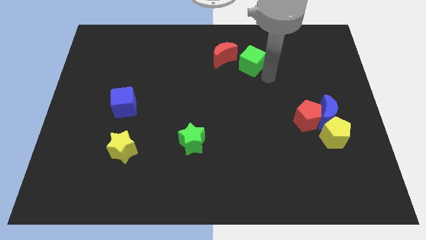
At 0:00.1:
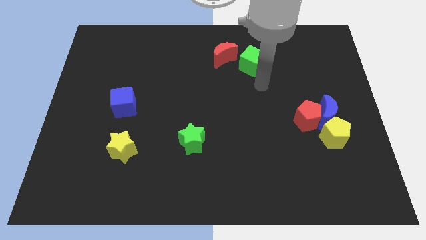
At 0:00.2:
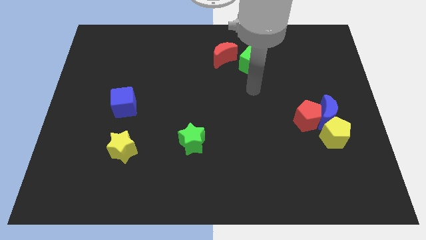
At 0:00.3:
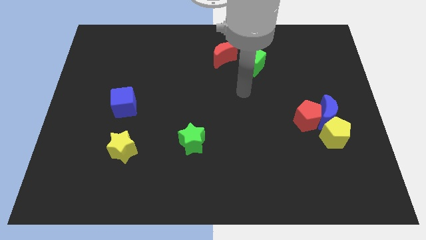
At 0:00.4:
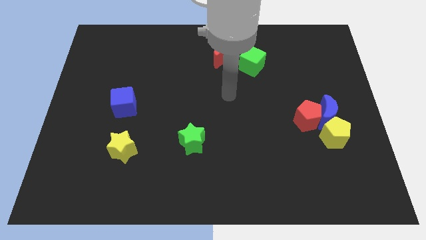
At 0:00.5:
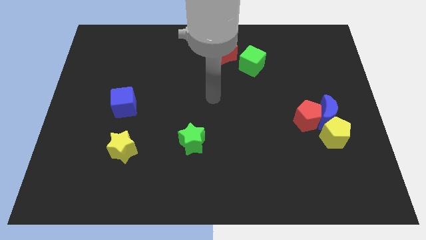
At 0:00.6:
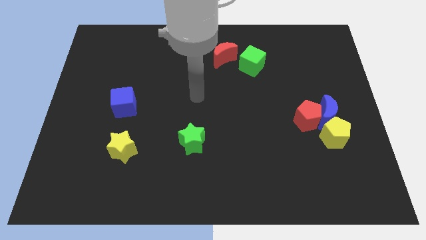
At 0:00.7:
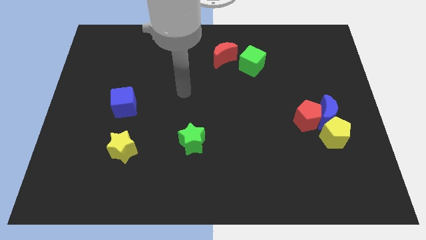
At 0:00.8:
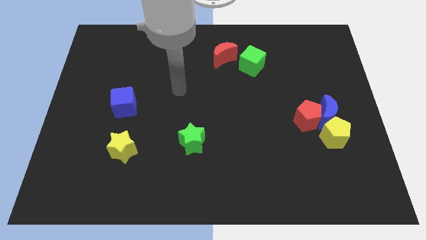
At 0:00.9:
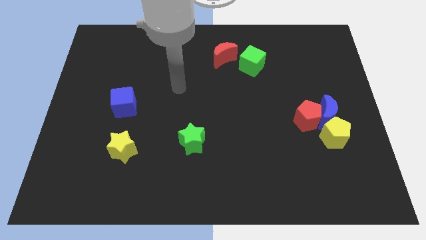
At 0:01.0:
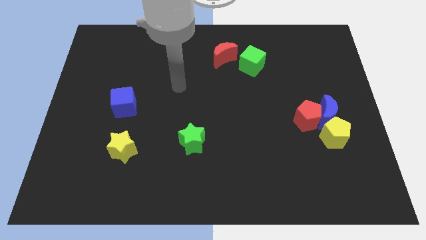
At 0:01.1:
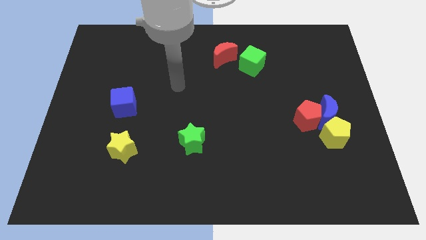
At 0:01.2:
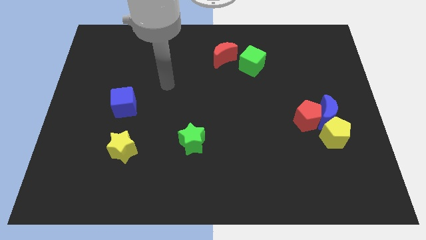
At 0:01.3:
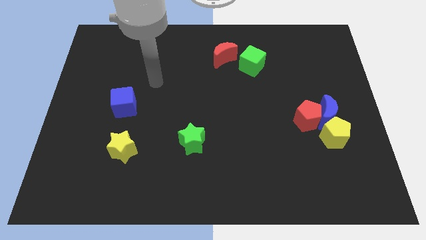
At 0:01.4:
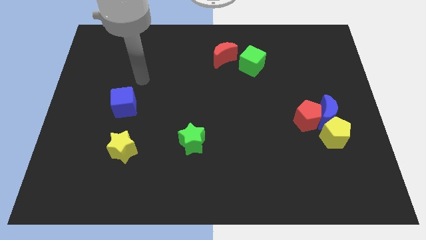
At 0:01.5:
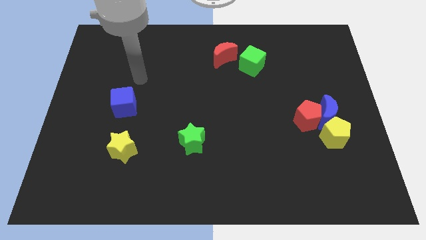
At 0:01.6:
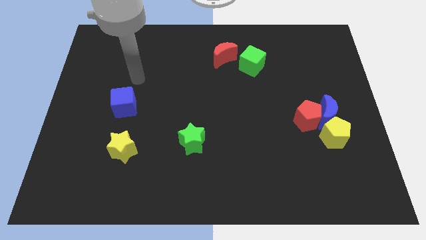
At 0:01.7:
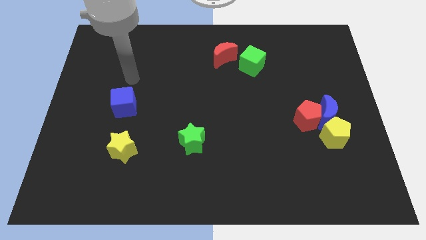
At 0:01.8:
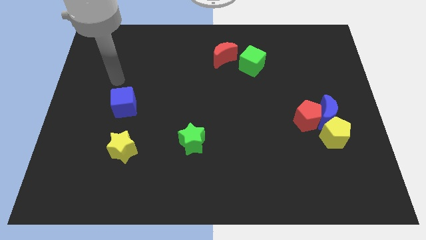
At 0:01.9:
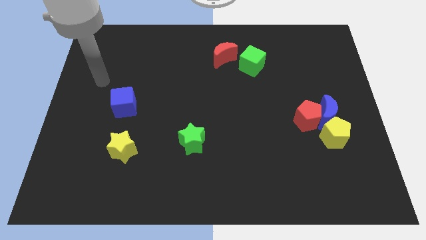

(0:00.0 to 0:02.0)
move the arm away from the green cube

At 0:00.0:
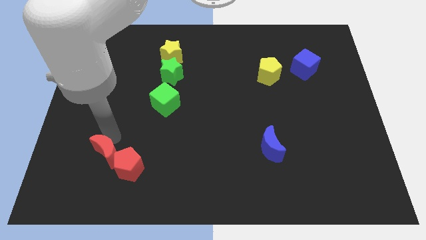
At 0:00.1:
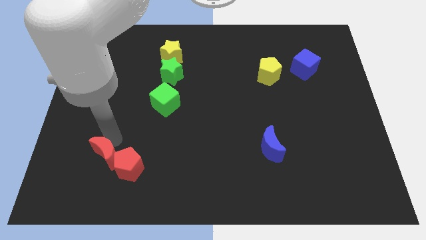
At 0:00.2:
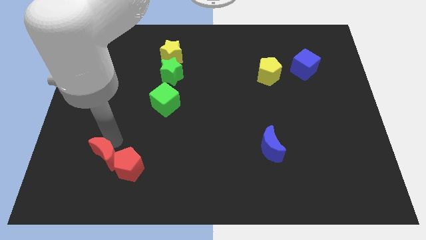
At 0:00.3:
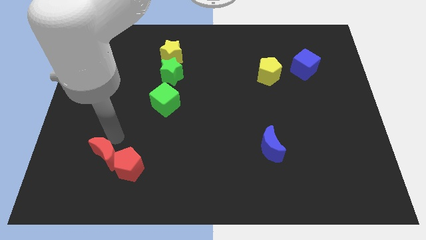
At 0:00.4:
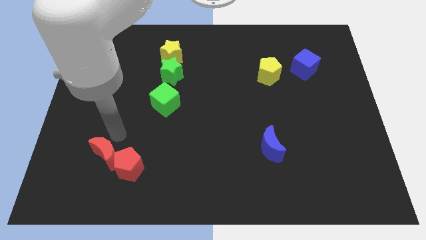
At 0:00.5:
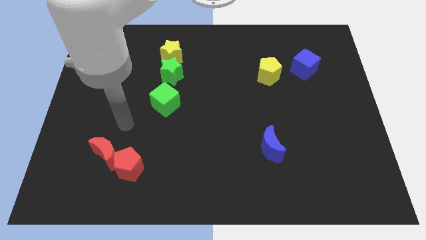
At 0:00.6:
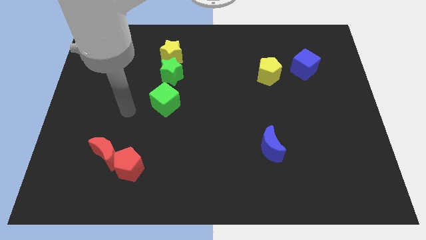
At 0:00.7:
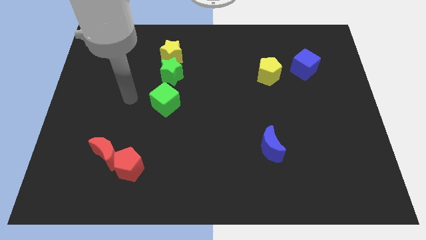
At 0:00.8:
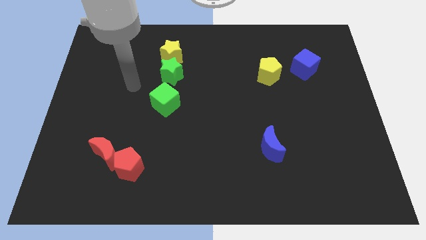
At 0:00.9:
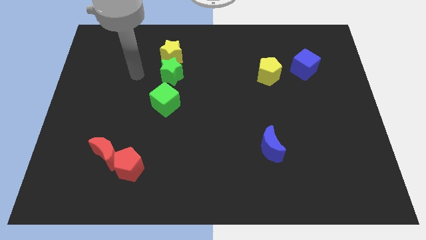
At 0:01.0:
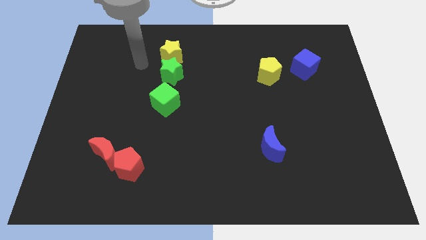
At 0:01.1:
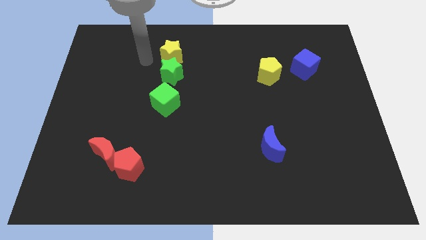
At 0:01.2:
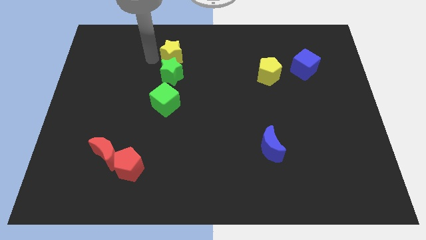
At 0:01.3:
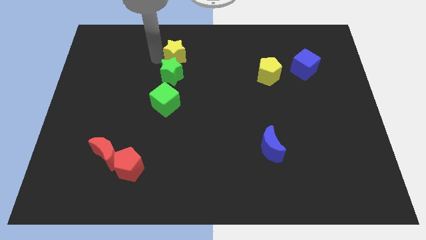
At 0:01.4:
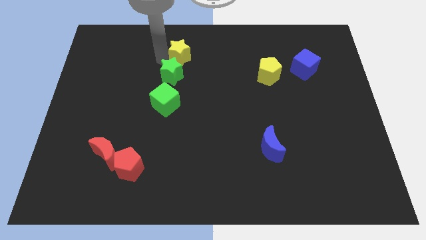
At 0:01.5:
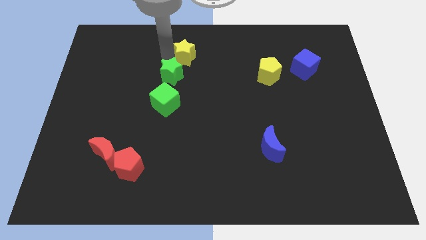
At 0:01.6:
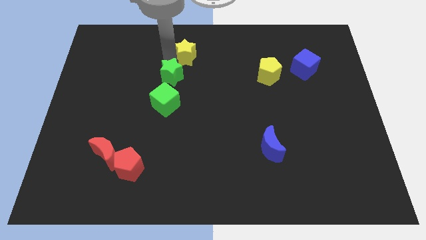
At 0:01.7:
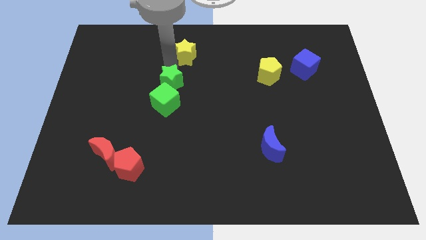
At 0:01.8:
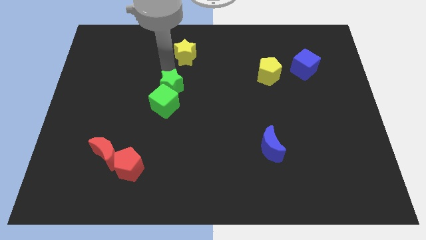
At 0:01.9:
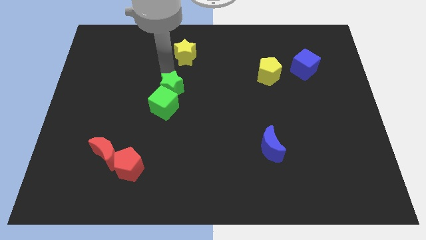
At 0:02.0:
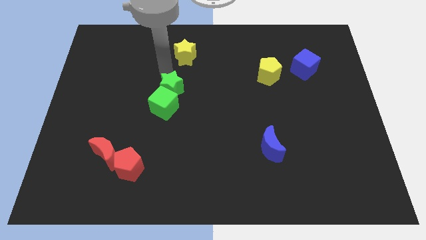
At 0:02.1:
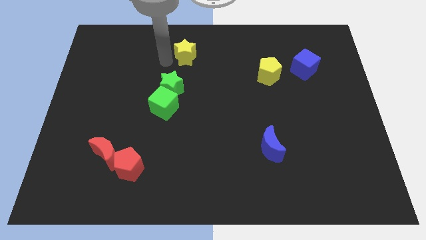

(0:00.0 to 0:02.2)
push the green star into the green cube

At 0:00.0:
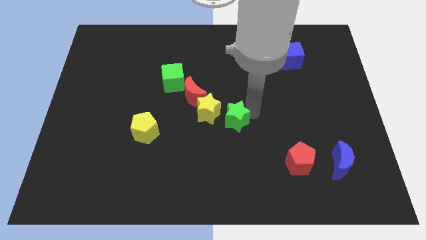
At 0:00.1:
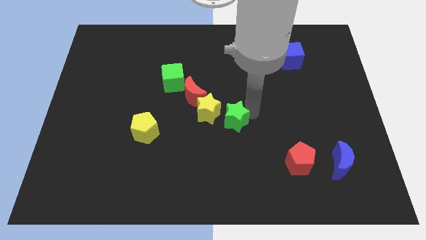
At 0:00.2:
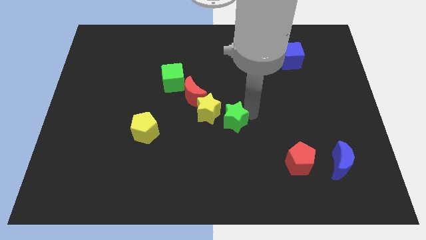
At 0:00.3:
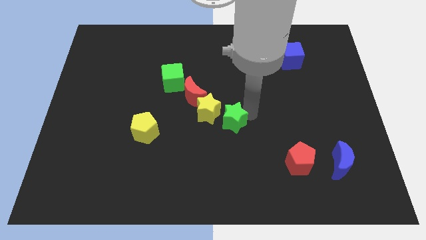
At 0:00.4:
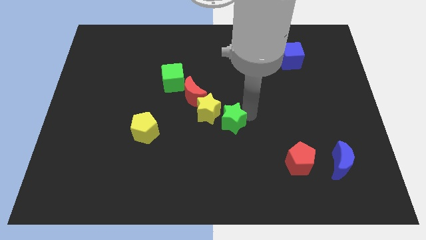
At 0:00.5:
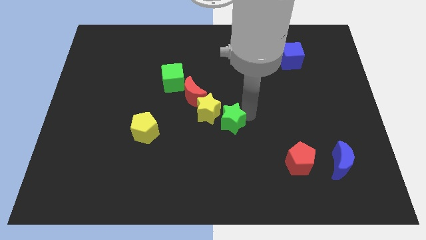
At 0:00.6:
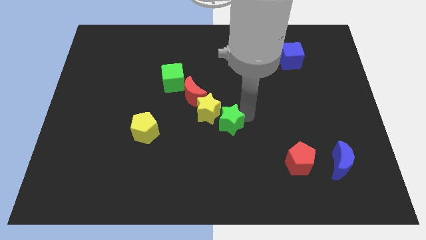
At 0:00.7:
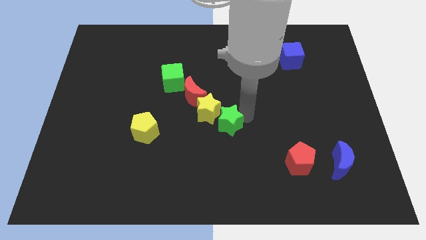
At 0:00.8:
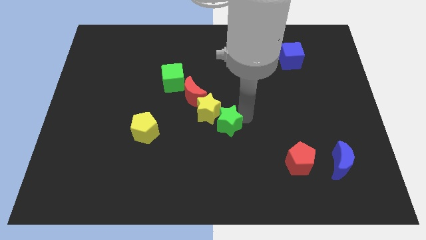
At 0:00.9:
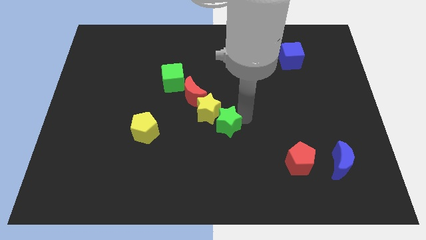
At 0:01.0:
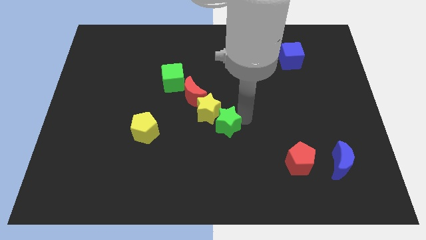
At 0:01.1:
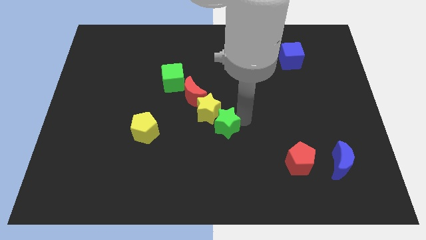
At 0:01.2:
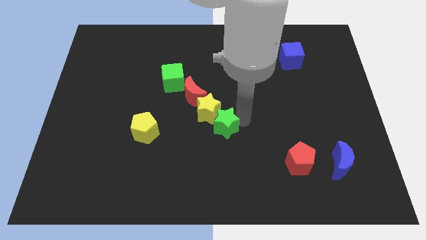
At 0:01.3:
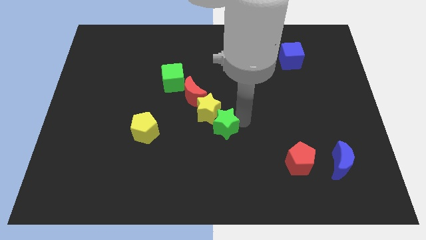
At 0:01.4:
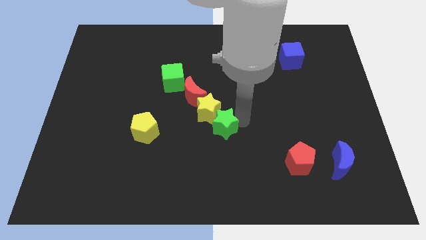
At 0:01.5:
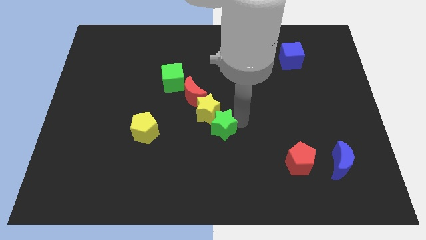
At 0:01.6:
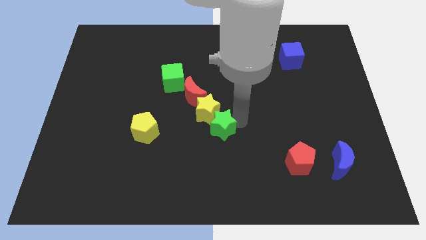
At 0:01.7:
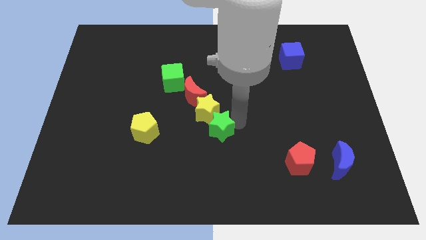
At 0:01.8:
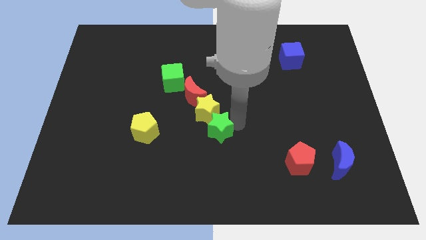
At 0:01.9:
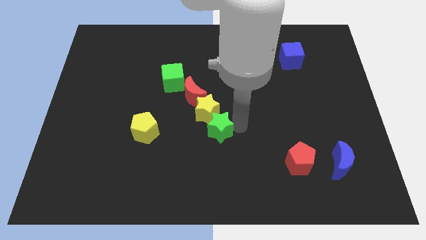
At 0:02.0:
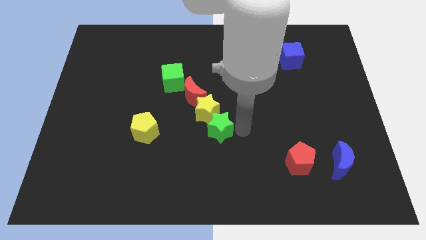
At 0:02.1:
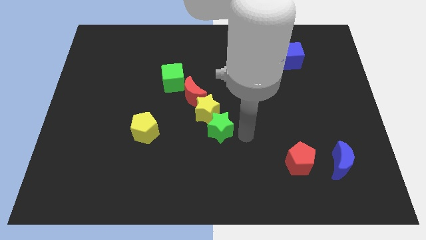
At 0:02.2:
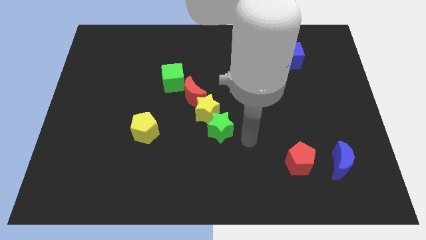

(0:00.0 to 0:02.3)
move the green star to the bottom of the yellow star

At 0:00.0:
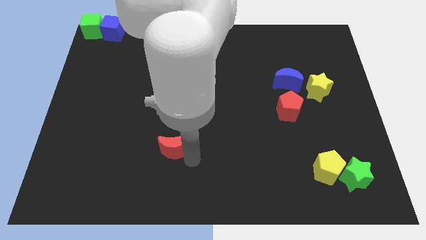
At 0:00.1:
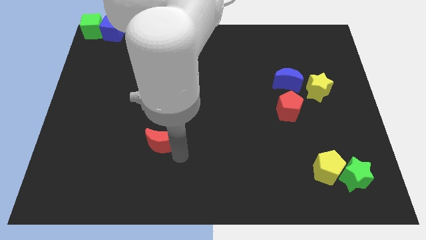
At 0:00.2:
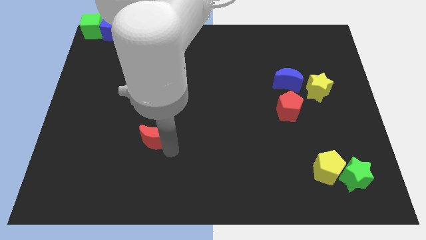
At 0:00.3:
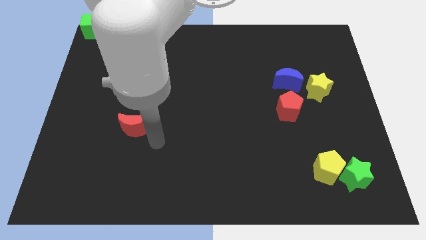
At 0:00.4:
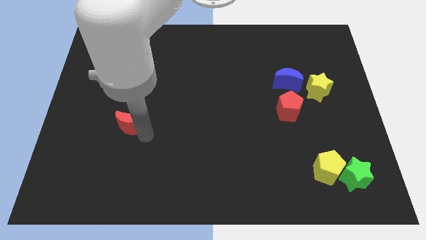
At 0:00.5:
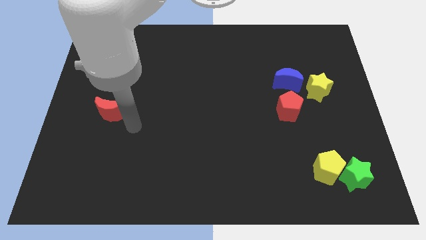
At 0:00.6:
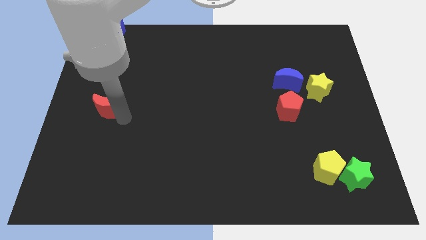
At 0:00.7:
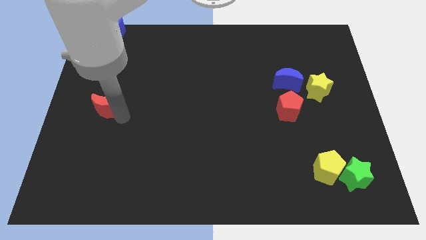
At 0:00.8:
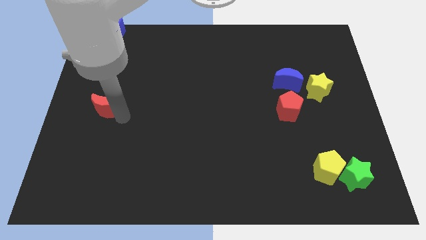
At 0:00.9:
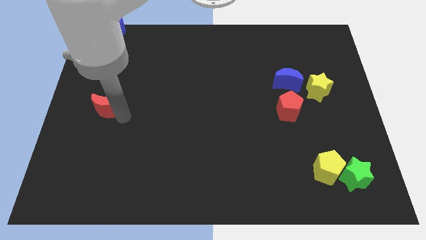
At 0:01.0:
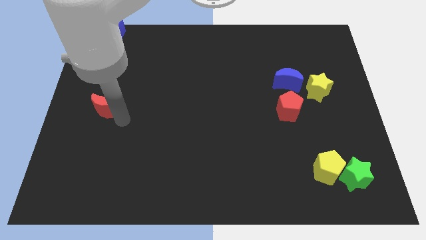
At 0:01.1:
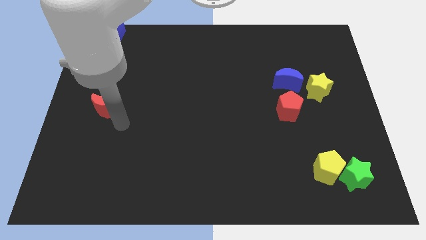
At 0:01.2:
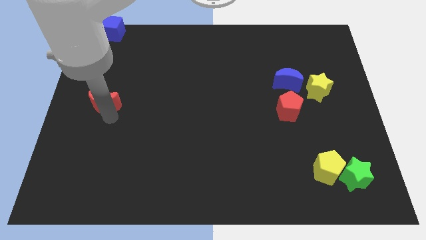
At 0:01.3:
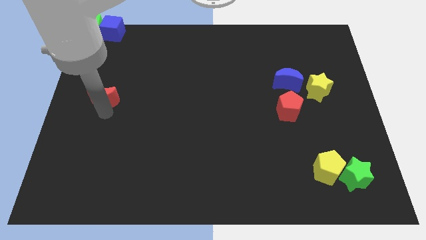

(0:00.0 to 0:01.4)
drag the red moon slightly upwards

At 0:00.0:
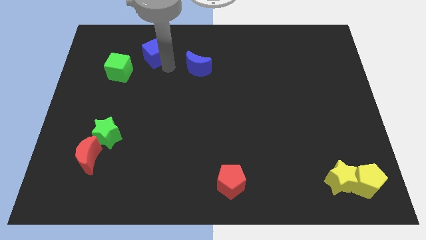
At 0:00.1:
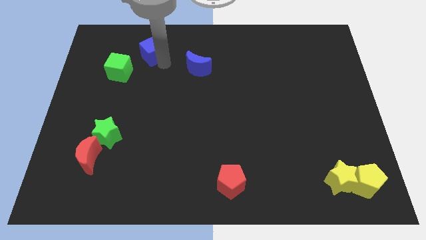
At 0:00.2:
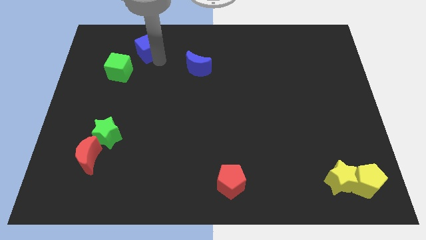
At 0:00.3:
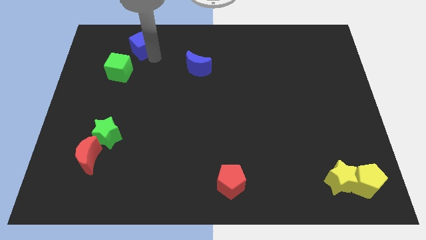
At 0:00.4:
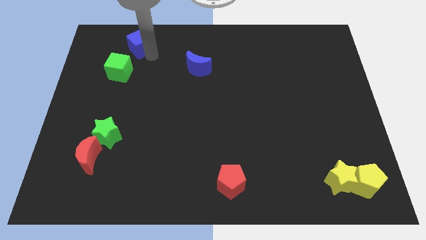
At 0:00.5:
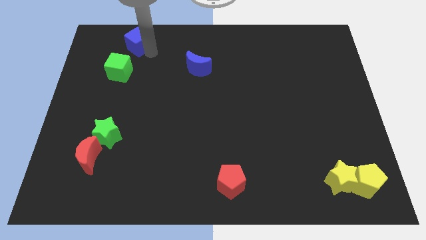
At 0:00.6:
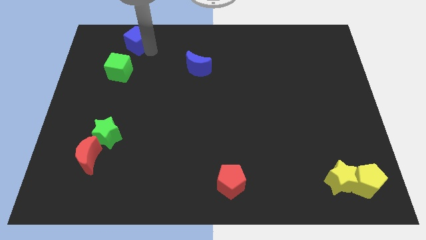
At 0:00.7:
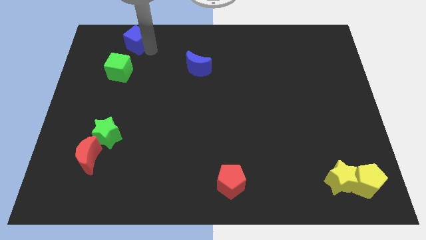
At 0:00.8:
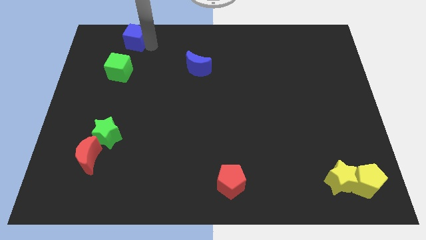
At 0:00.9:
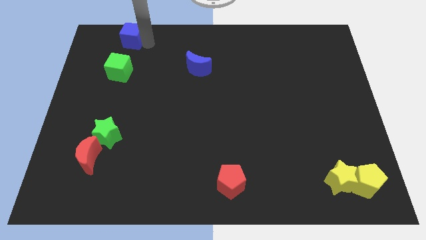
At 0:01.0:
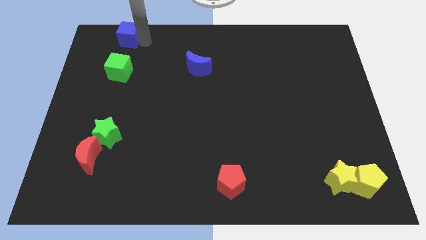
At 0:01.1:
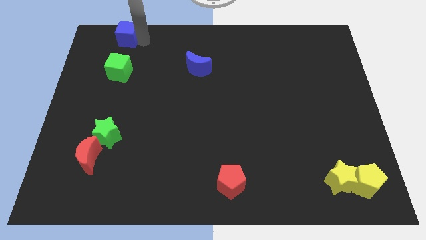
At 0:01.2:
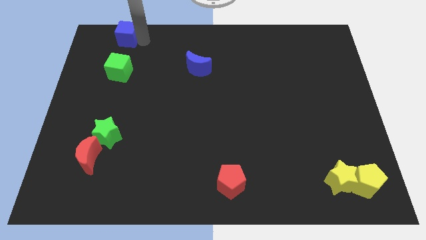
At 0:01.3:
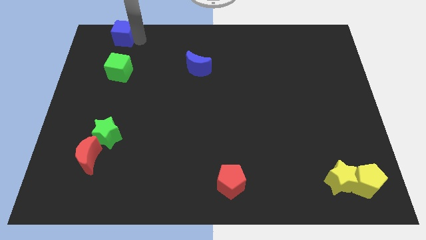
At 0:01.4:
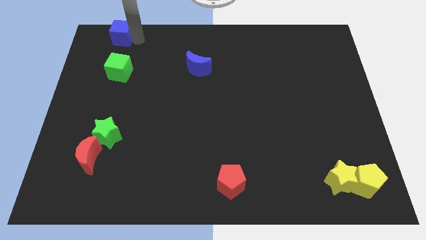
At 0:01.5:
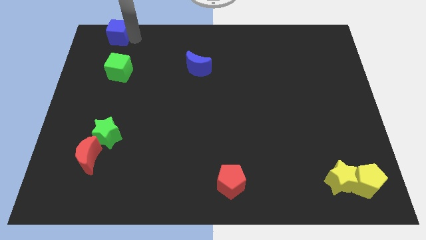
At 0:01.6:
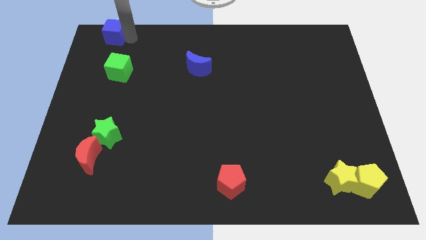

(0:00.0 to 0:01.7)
place blue cube to the top of green cube
